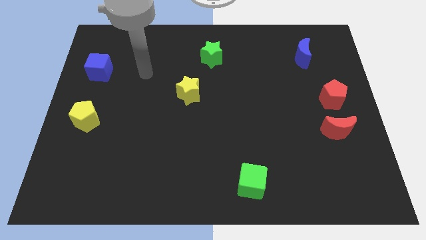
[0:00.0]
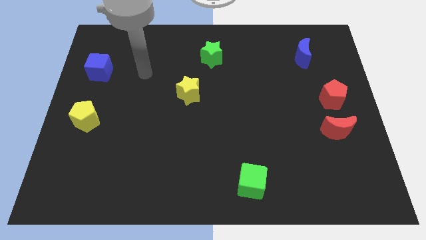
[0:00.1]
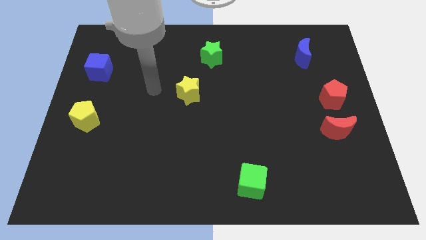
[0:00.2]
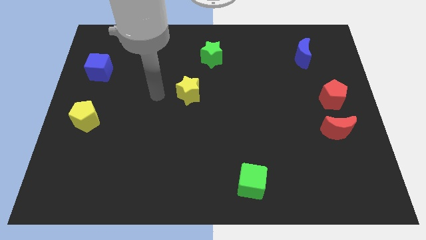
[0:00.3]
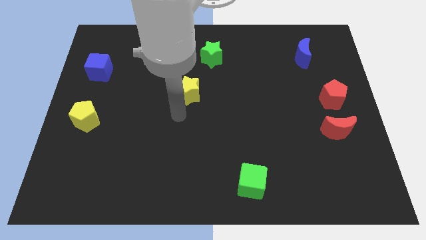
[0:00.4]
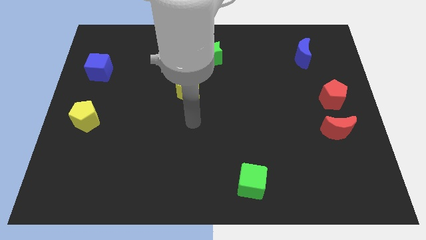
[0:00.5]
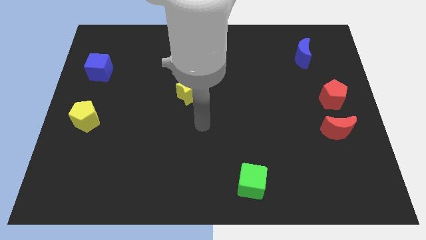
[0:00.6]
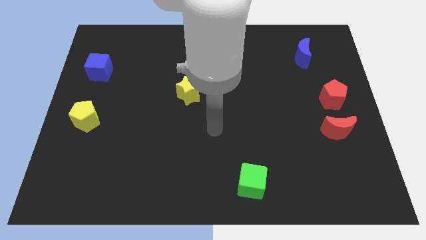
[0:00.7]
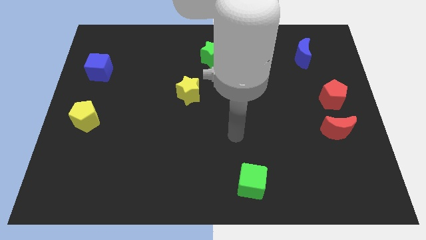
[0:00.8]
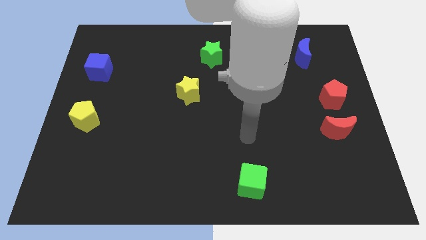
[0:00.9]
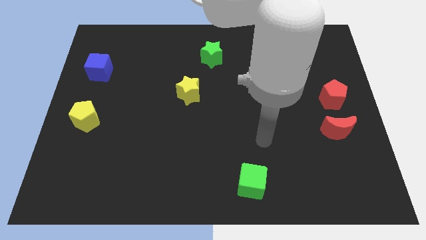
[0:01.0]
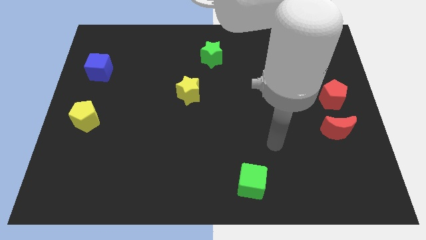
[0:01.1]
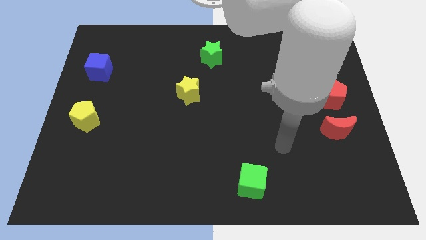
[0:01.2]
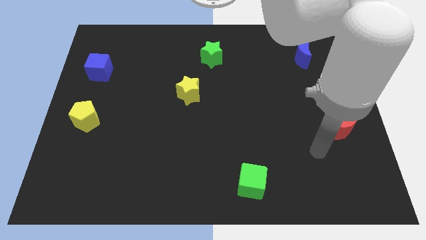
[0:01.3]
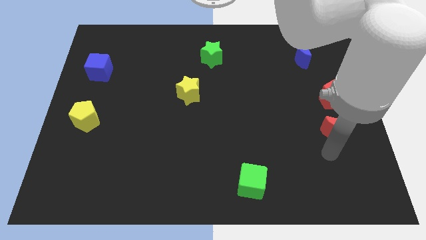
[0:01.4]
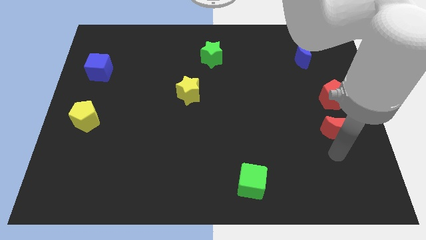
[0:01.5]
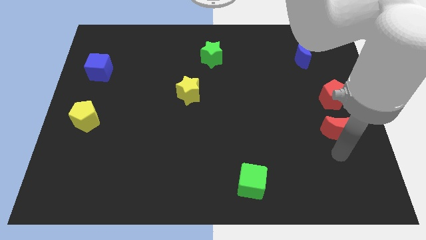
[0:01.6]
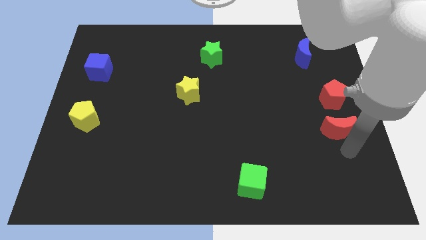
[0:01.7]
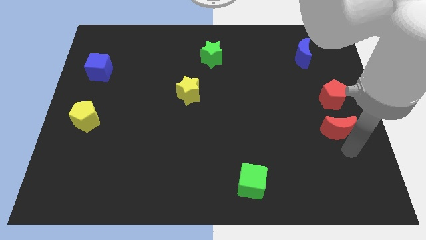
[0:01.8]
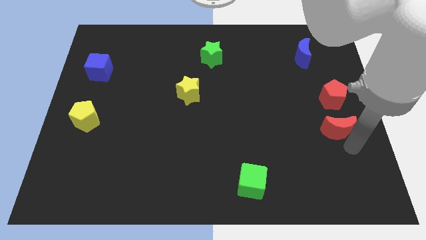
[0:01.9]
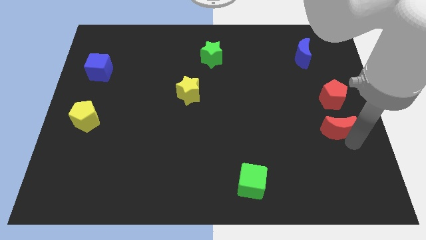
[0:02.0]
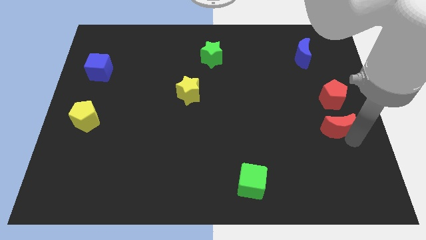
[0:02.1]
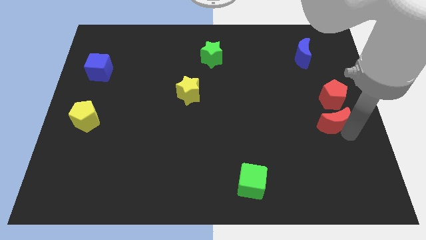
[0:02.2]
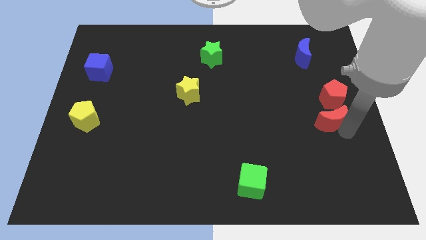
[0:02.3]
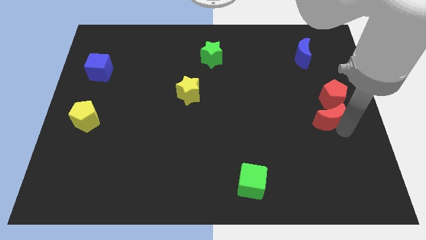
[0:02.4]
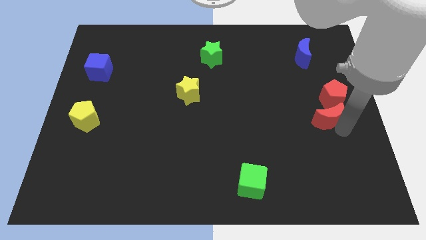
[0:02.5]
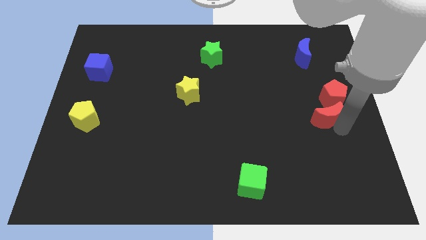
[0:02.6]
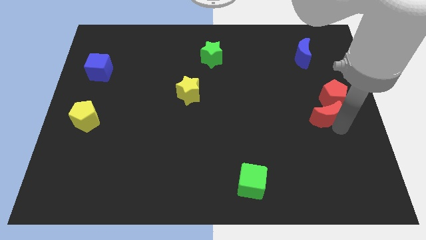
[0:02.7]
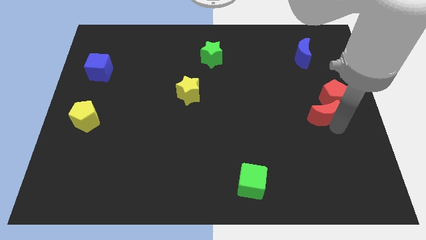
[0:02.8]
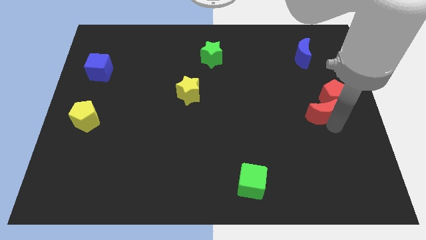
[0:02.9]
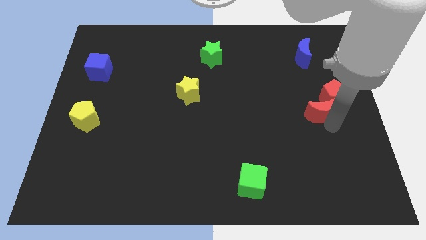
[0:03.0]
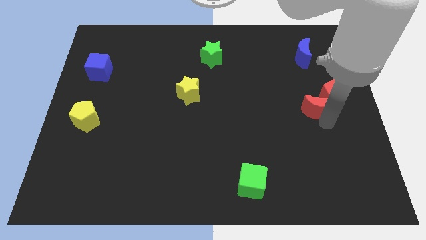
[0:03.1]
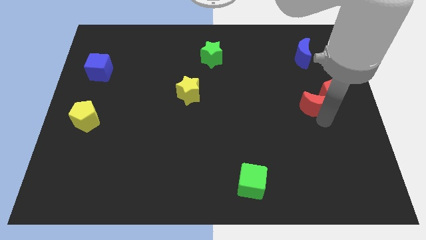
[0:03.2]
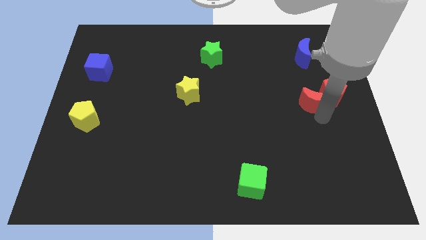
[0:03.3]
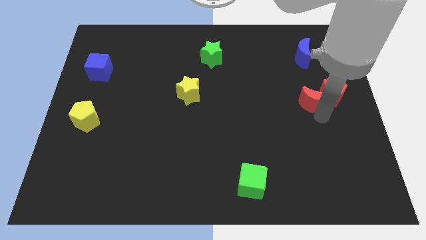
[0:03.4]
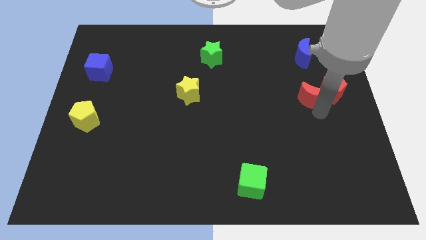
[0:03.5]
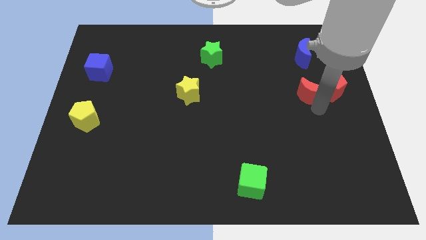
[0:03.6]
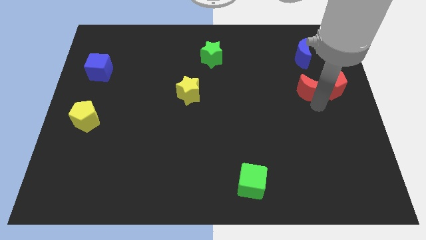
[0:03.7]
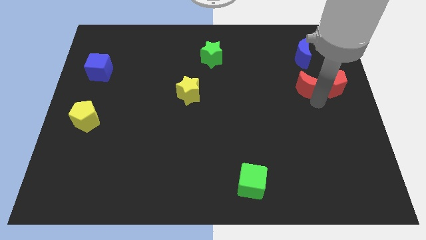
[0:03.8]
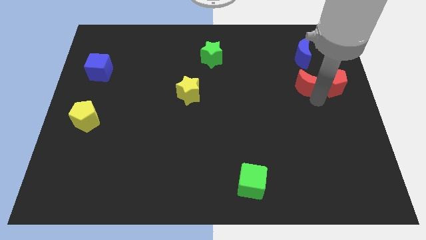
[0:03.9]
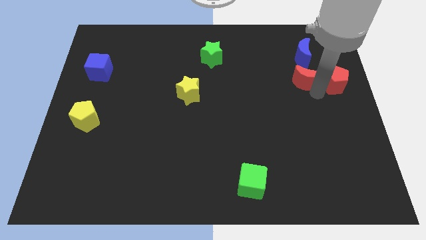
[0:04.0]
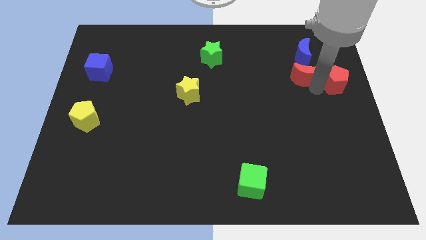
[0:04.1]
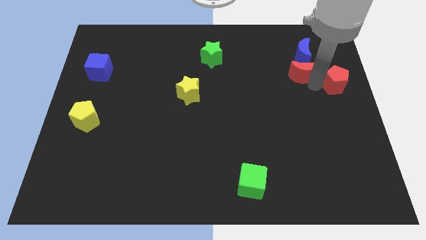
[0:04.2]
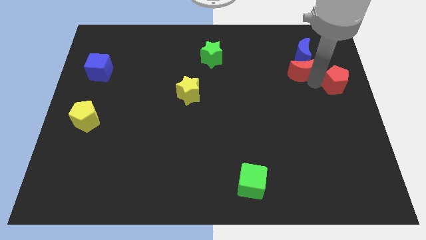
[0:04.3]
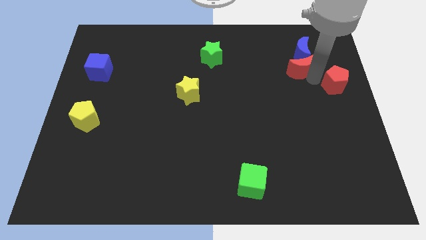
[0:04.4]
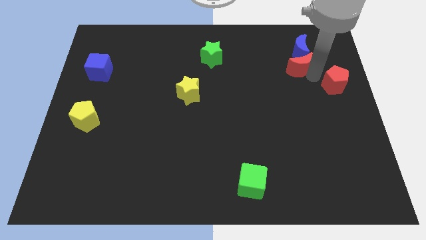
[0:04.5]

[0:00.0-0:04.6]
put the red moon next to the blue moon

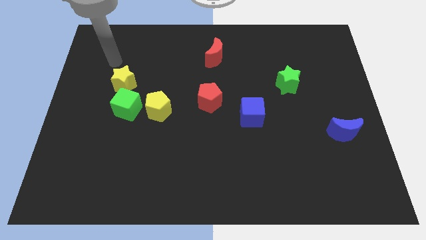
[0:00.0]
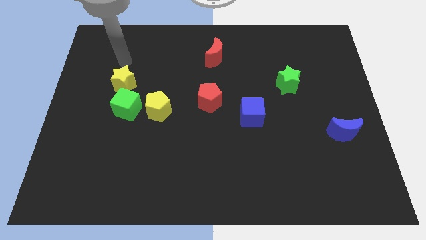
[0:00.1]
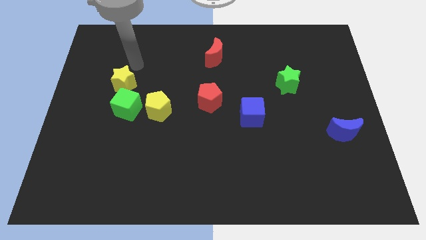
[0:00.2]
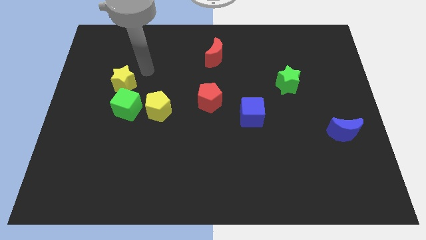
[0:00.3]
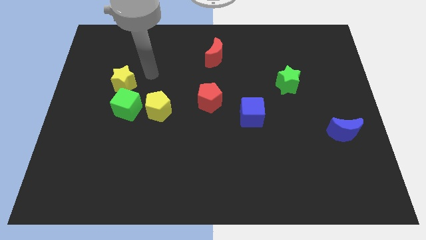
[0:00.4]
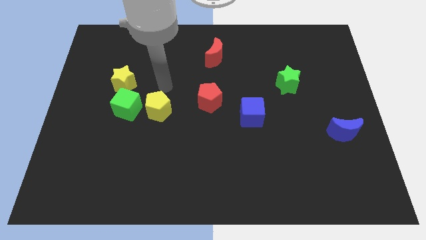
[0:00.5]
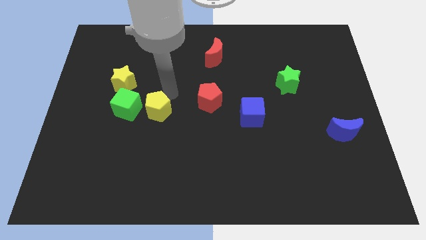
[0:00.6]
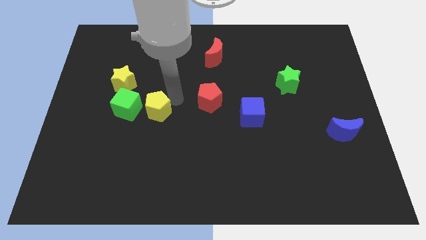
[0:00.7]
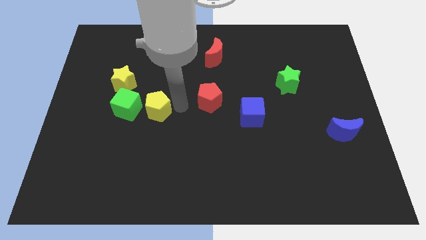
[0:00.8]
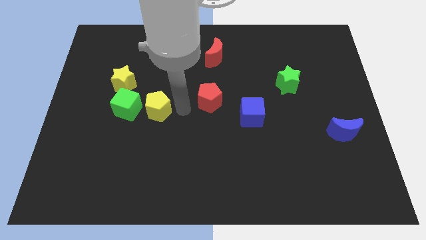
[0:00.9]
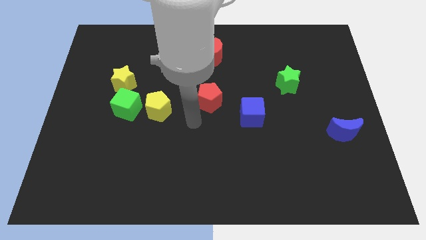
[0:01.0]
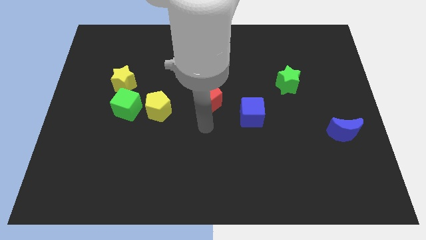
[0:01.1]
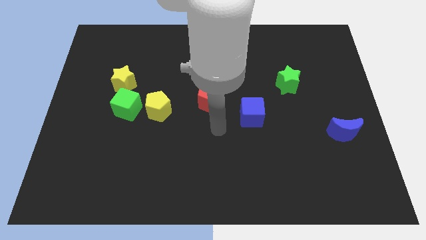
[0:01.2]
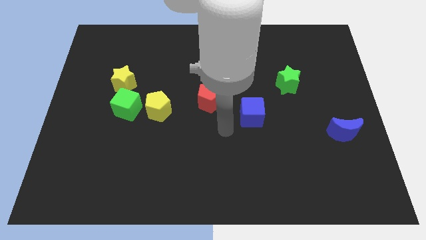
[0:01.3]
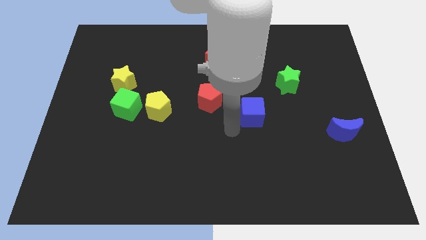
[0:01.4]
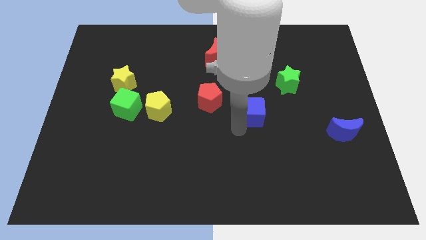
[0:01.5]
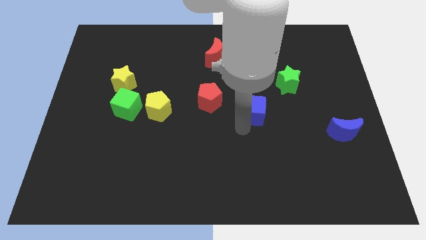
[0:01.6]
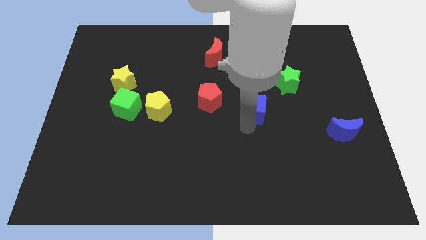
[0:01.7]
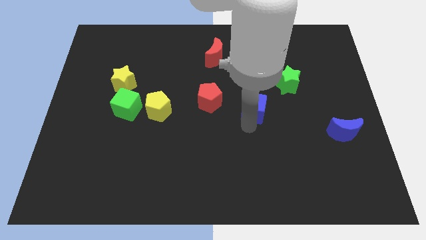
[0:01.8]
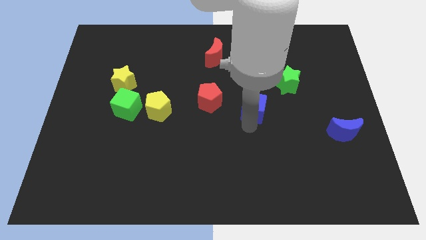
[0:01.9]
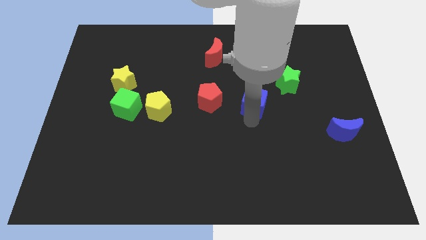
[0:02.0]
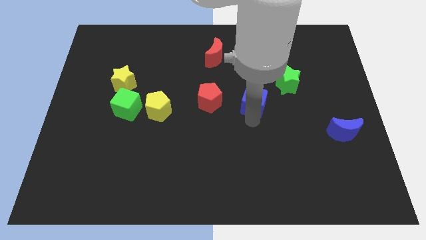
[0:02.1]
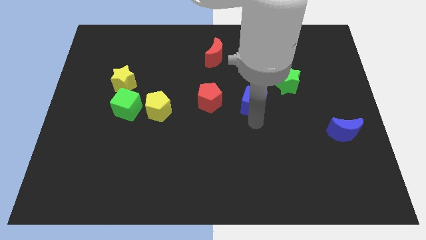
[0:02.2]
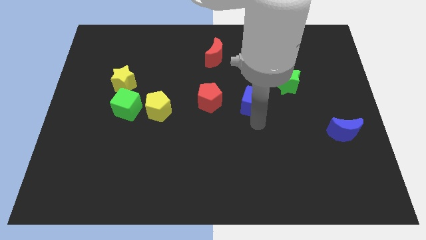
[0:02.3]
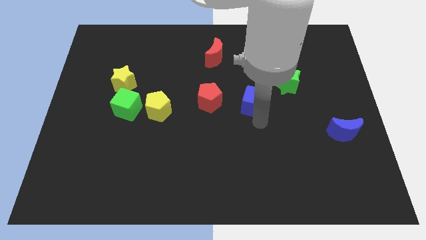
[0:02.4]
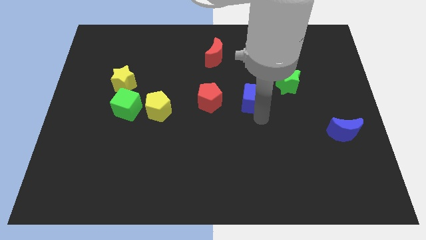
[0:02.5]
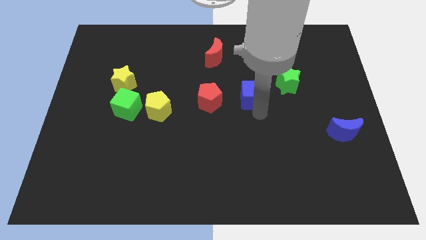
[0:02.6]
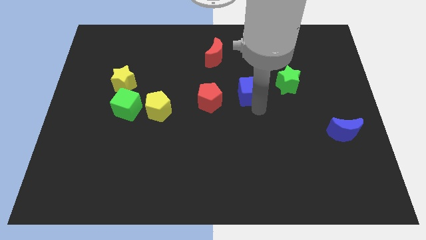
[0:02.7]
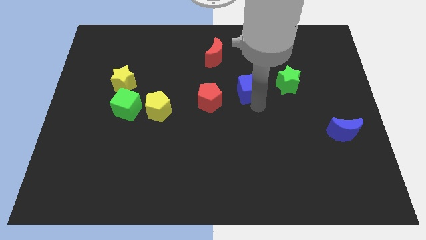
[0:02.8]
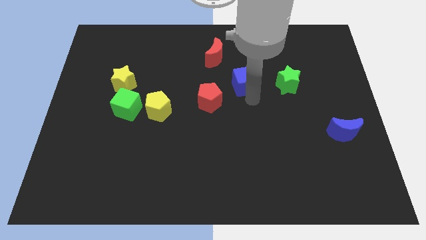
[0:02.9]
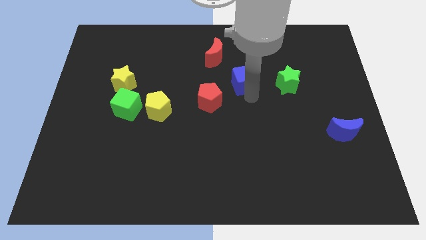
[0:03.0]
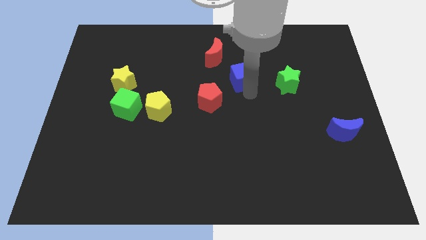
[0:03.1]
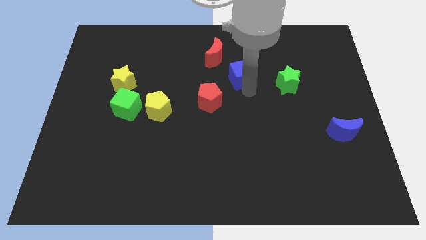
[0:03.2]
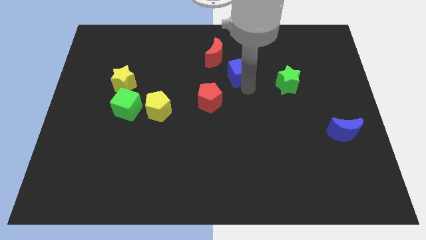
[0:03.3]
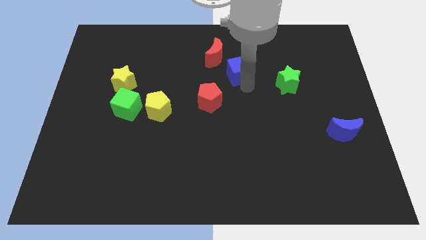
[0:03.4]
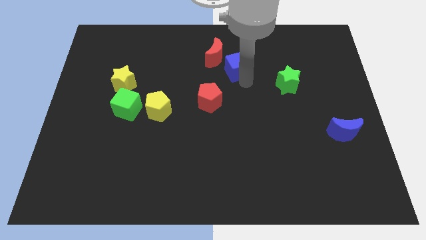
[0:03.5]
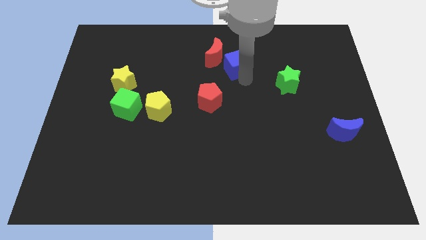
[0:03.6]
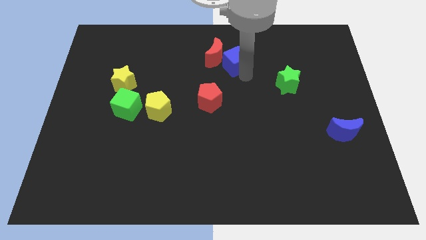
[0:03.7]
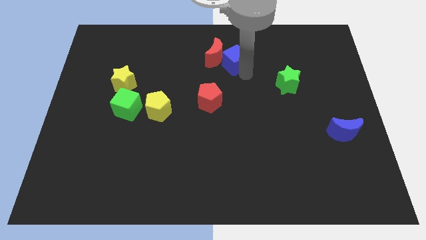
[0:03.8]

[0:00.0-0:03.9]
push the blue cube to the red moon

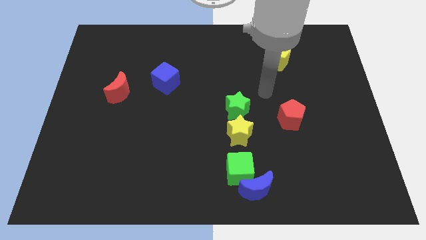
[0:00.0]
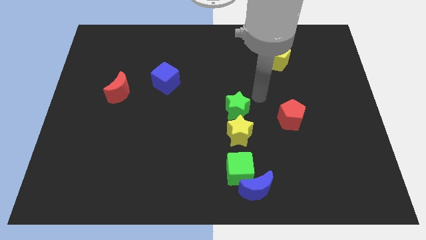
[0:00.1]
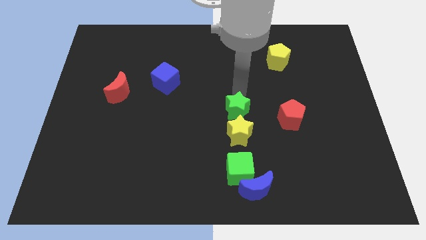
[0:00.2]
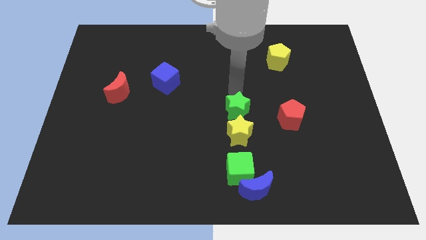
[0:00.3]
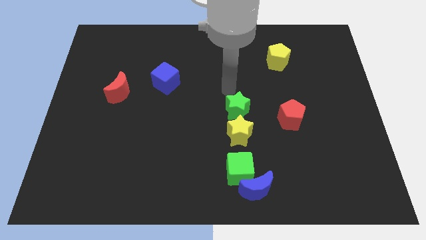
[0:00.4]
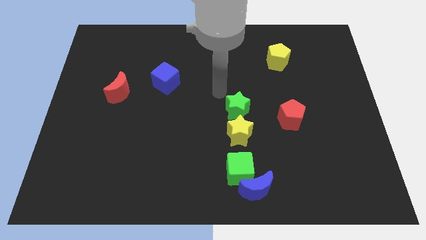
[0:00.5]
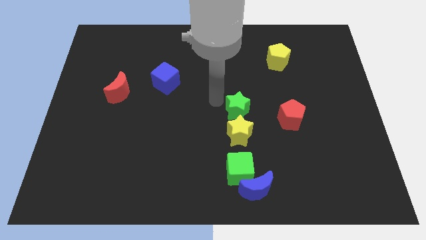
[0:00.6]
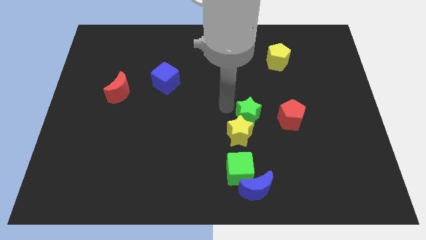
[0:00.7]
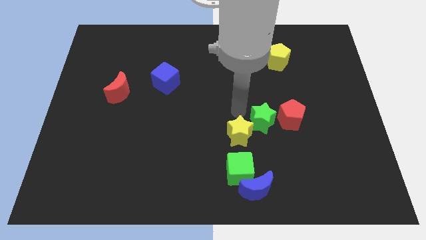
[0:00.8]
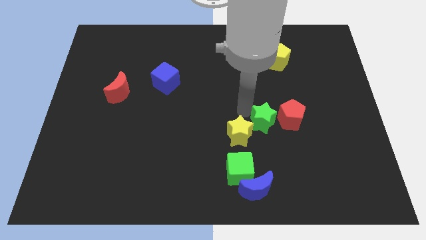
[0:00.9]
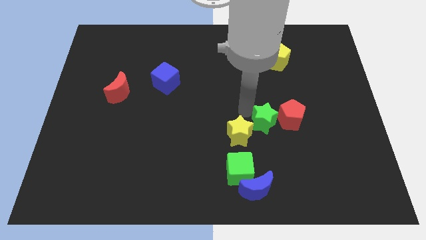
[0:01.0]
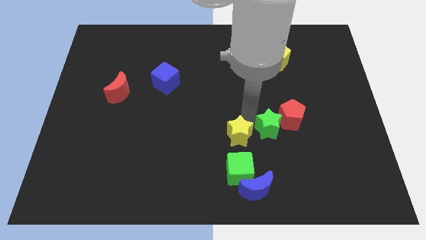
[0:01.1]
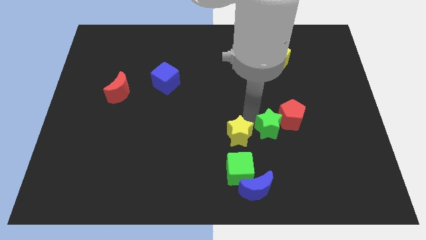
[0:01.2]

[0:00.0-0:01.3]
put the green star next to the red pentagon
